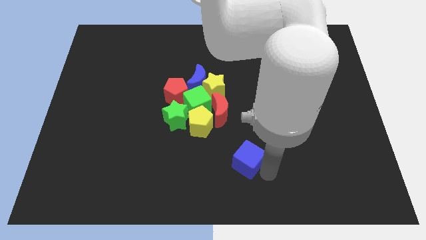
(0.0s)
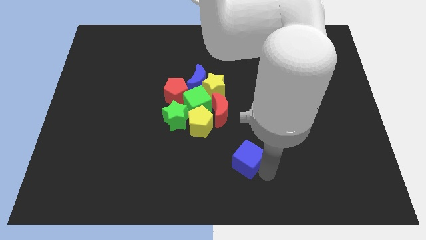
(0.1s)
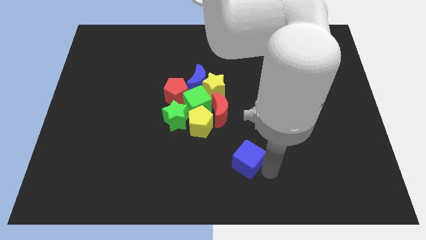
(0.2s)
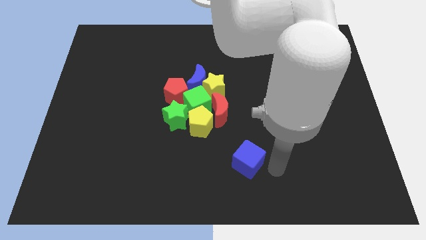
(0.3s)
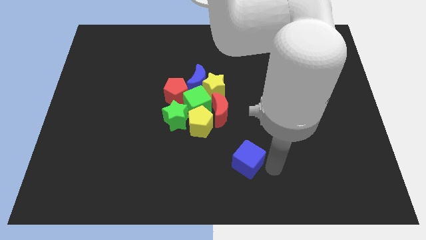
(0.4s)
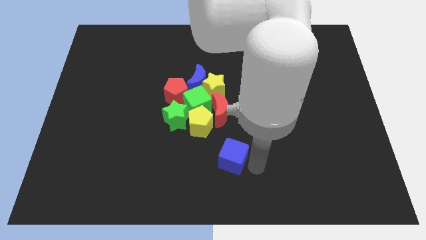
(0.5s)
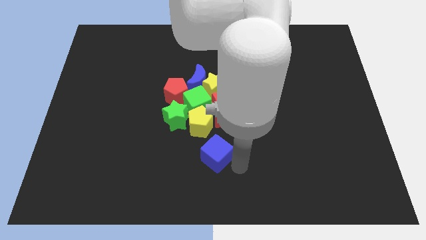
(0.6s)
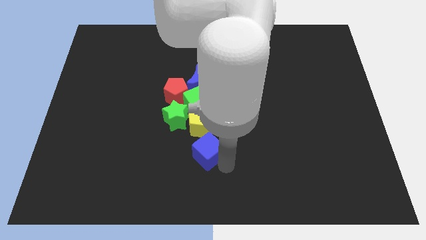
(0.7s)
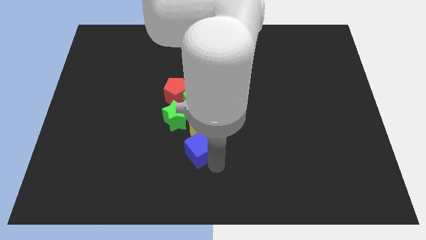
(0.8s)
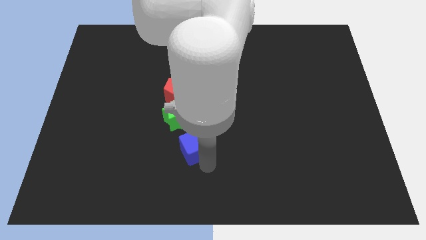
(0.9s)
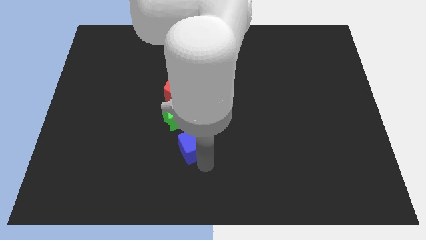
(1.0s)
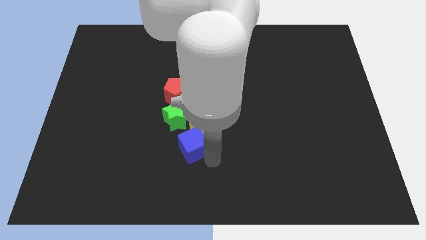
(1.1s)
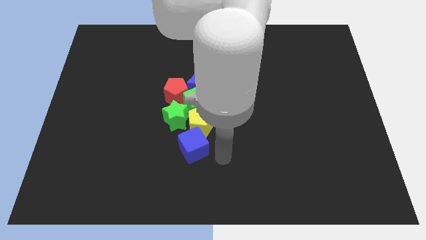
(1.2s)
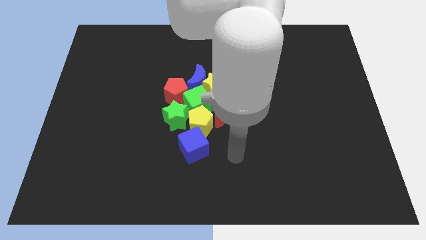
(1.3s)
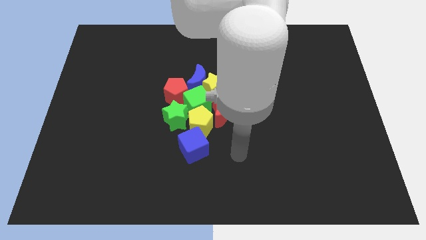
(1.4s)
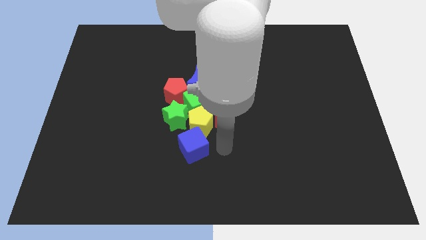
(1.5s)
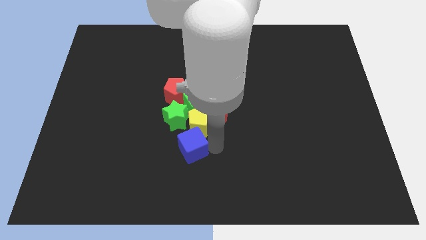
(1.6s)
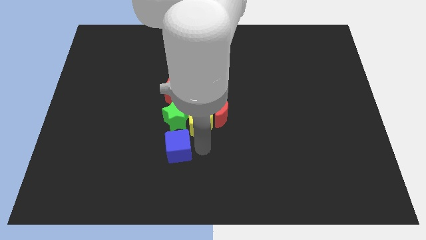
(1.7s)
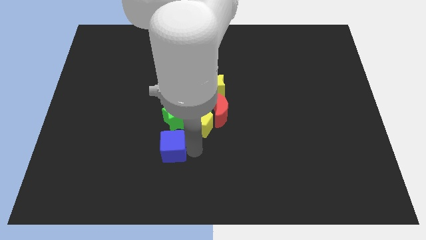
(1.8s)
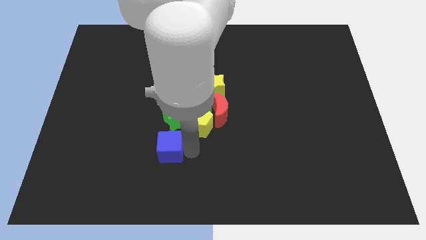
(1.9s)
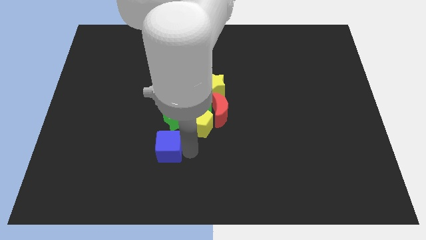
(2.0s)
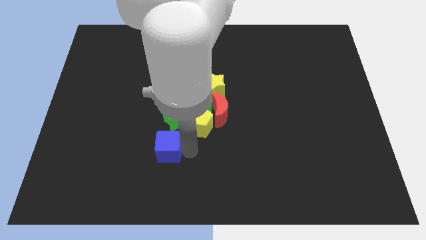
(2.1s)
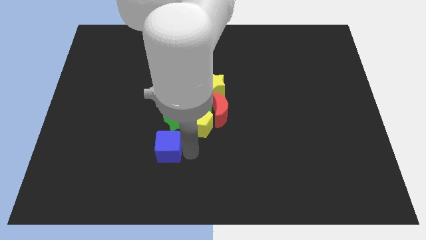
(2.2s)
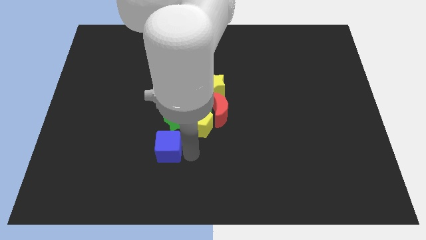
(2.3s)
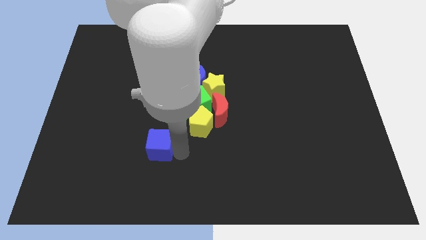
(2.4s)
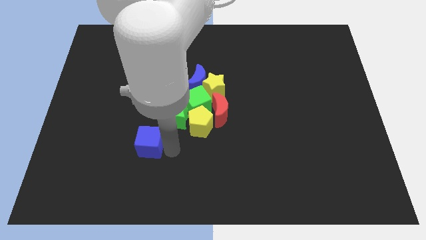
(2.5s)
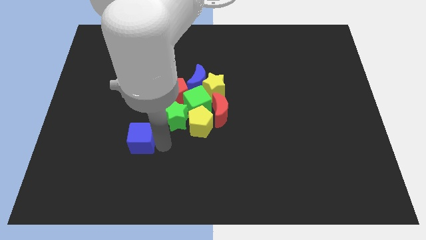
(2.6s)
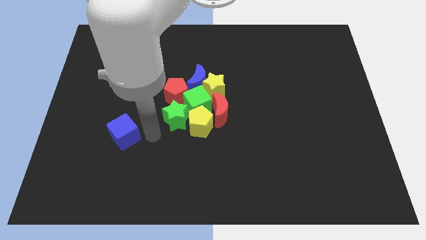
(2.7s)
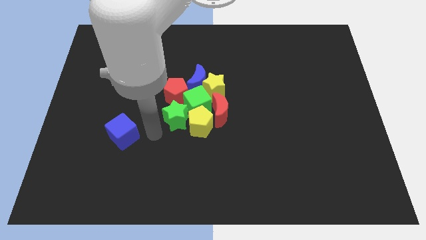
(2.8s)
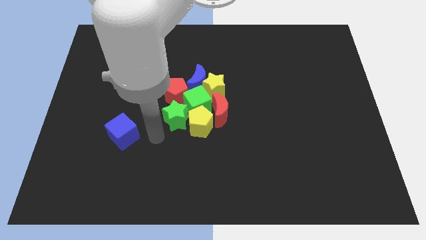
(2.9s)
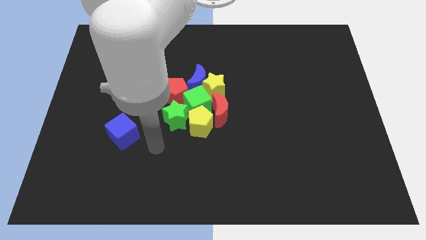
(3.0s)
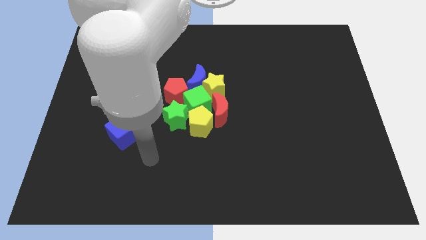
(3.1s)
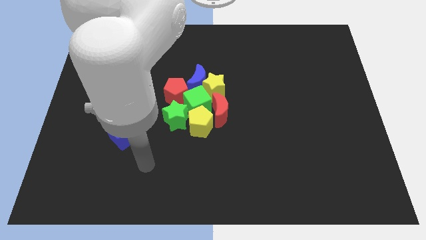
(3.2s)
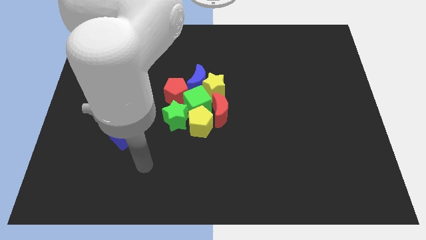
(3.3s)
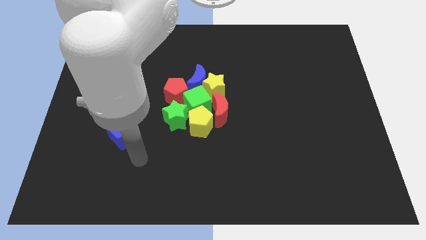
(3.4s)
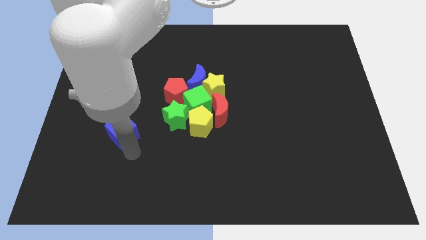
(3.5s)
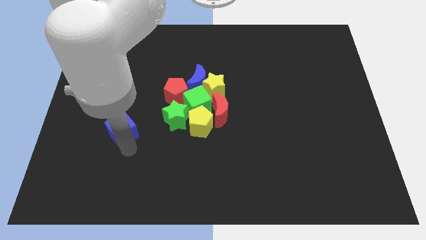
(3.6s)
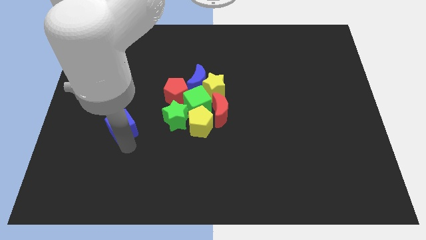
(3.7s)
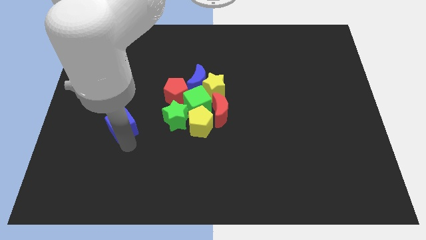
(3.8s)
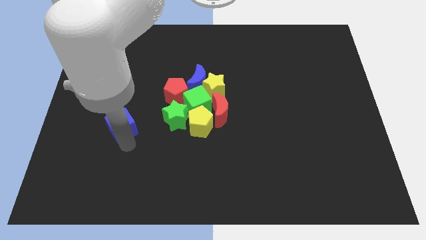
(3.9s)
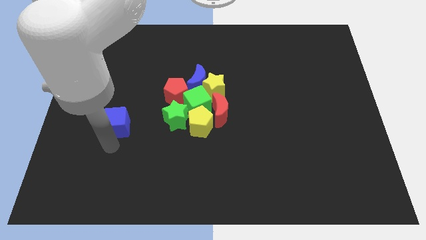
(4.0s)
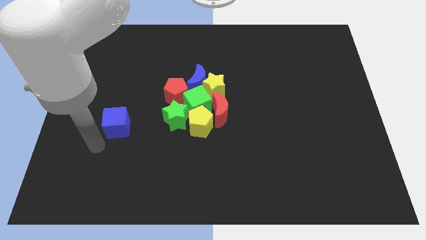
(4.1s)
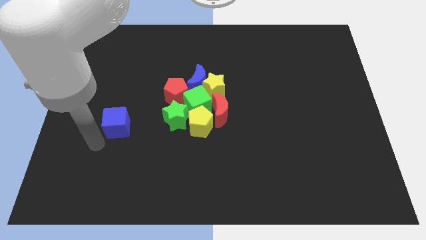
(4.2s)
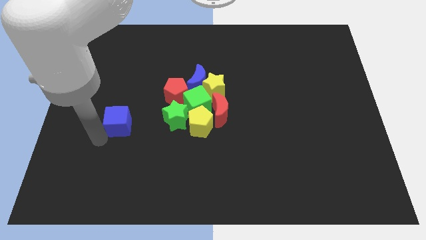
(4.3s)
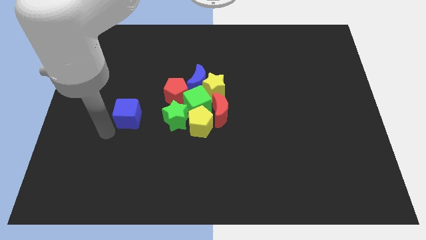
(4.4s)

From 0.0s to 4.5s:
move the blue cube left to the group of blocks

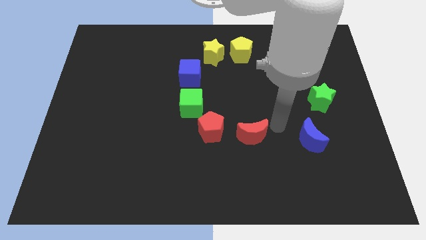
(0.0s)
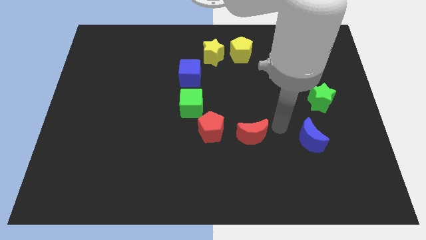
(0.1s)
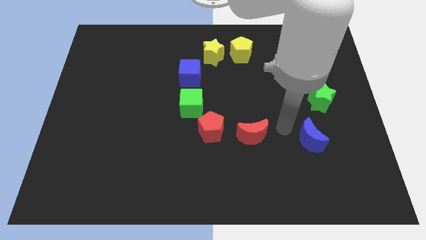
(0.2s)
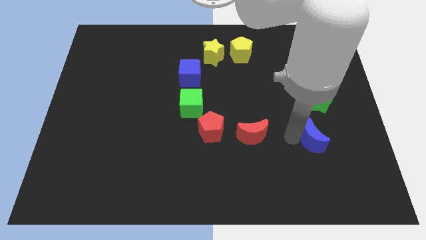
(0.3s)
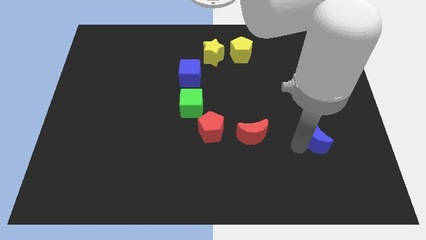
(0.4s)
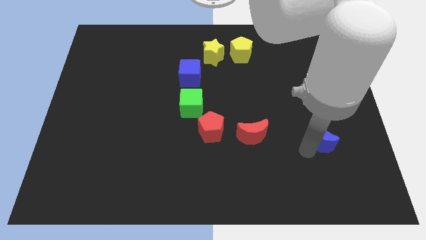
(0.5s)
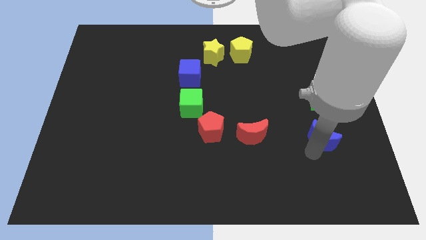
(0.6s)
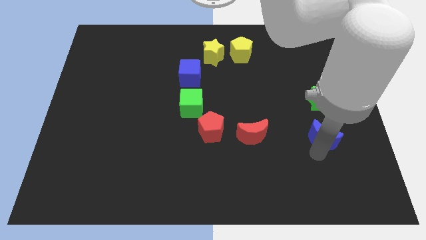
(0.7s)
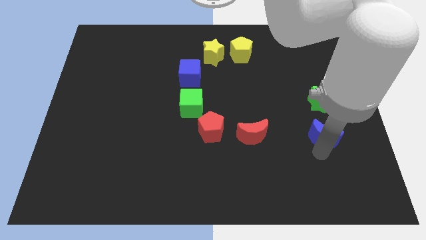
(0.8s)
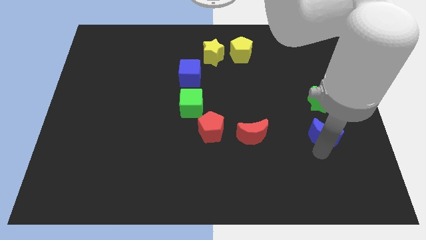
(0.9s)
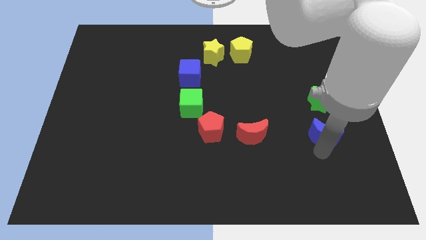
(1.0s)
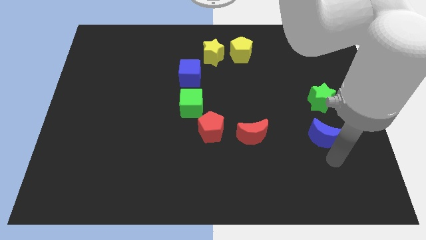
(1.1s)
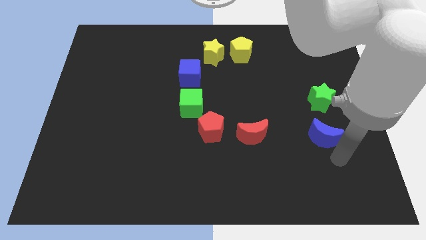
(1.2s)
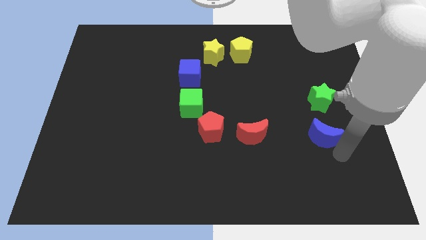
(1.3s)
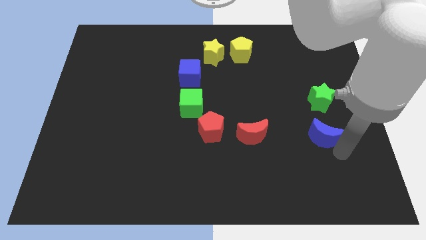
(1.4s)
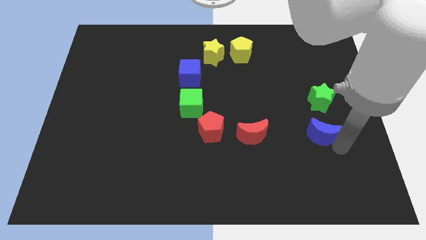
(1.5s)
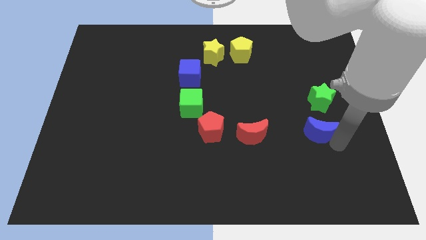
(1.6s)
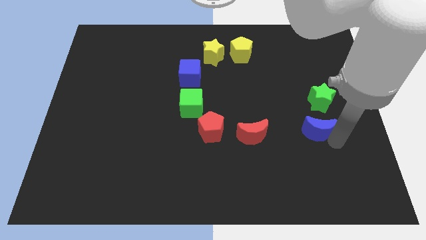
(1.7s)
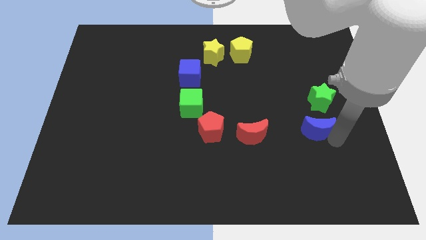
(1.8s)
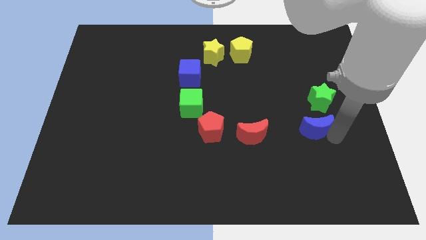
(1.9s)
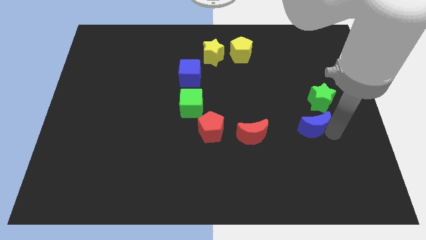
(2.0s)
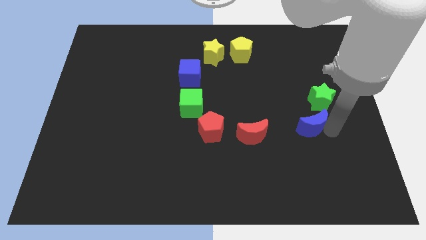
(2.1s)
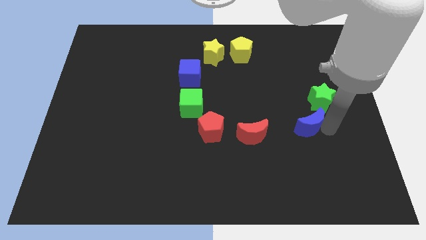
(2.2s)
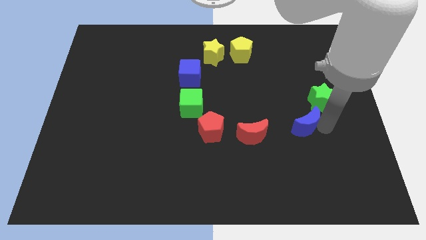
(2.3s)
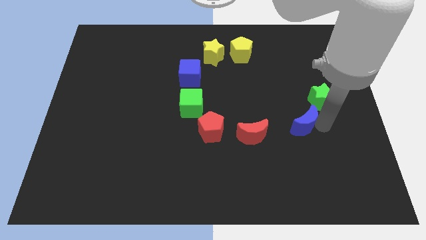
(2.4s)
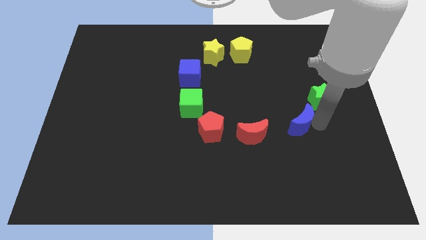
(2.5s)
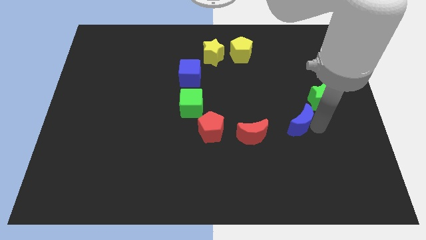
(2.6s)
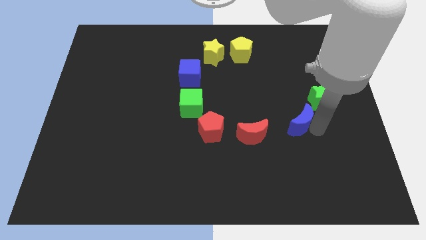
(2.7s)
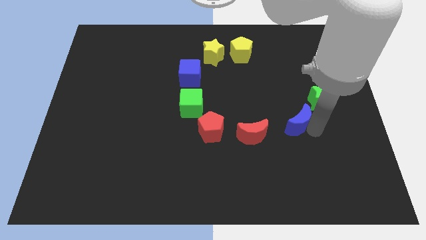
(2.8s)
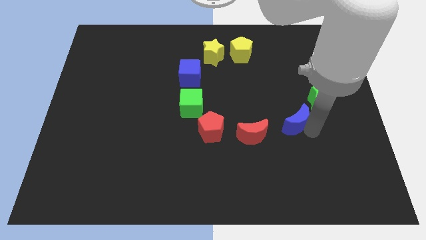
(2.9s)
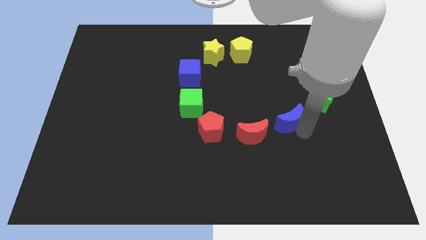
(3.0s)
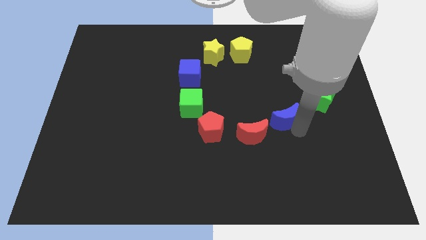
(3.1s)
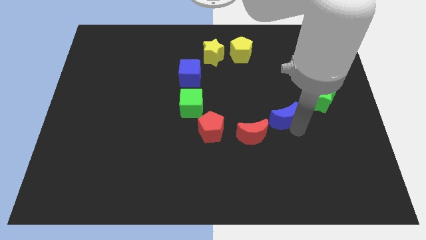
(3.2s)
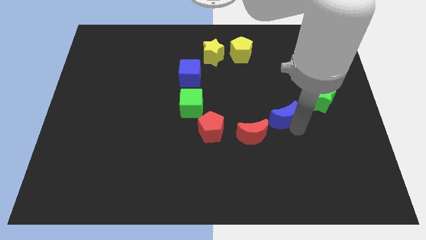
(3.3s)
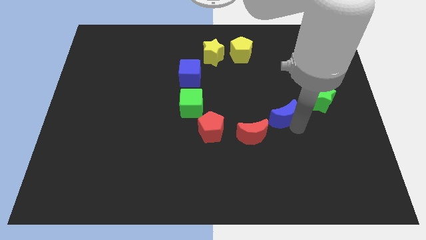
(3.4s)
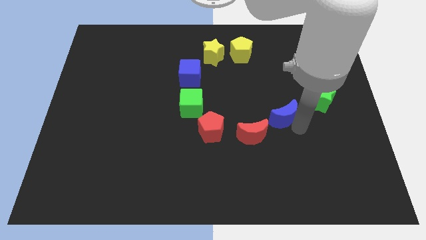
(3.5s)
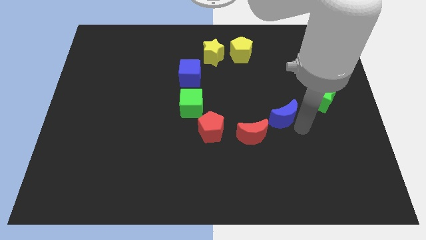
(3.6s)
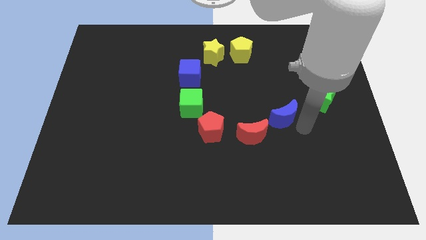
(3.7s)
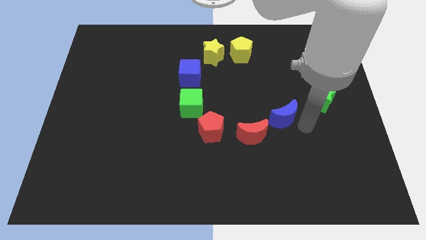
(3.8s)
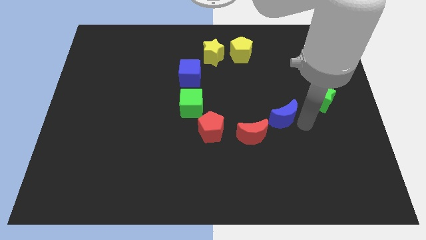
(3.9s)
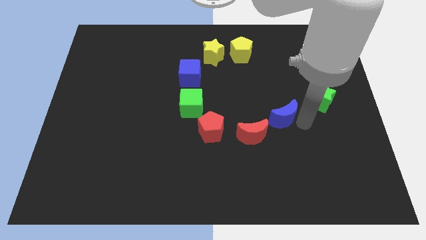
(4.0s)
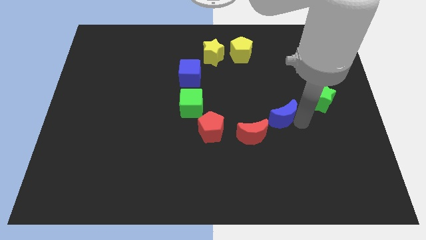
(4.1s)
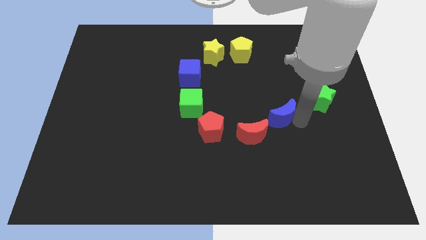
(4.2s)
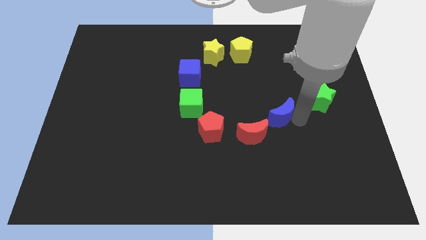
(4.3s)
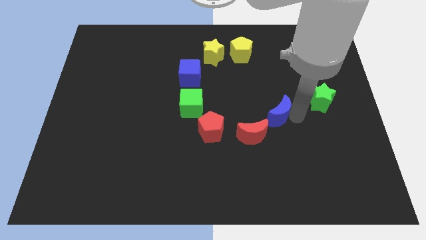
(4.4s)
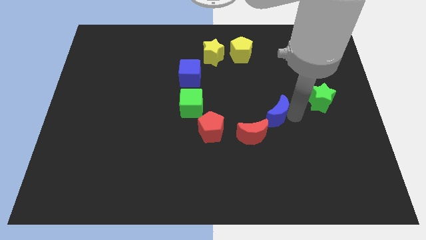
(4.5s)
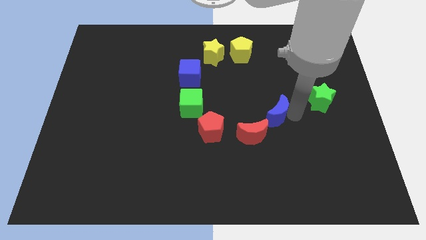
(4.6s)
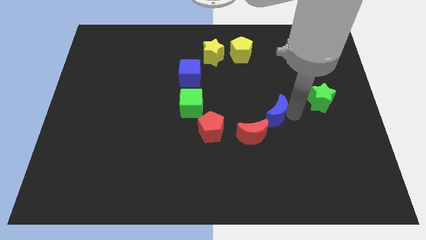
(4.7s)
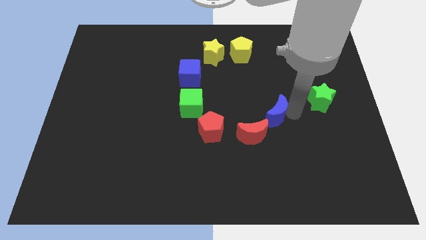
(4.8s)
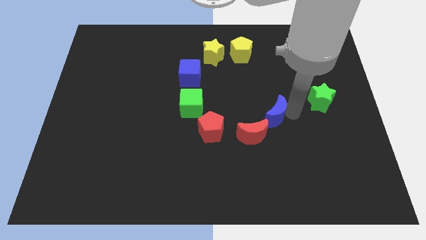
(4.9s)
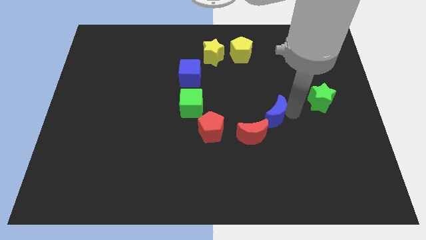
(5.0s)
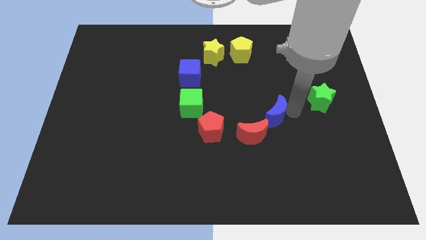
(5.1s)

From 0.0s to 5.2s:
push the blue crescent to the right of the red crescent
